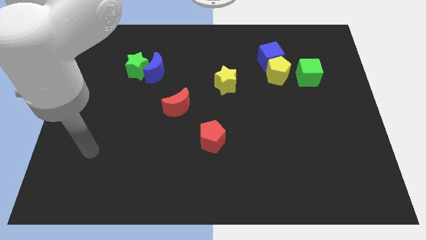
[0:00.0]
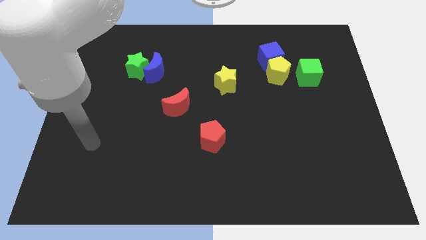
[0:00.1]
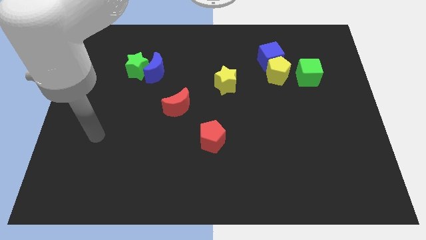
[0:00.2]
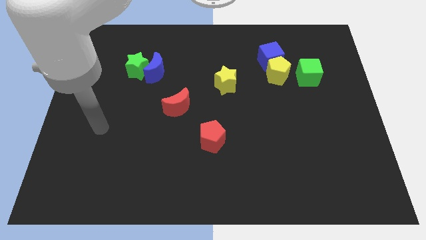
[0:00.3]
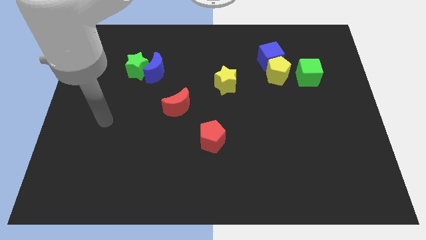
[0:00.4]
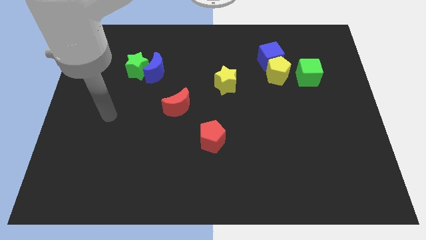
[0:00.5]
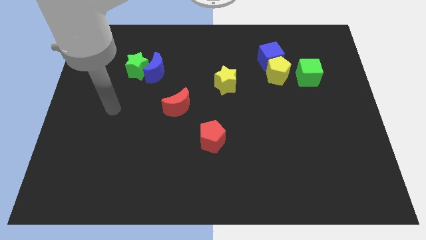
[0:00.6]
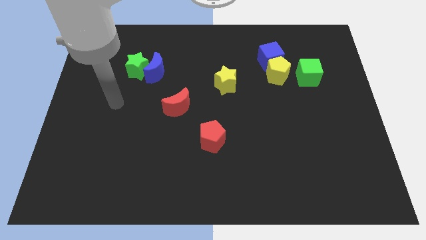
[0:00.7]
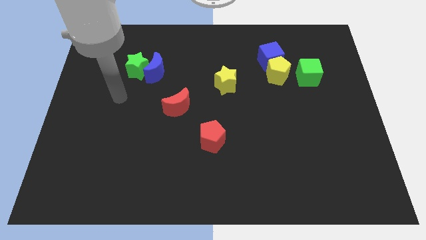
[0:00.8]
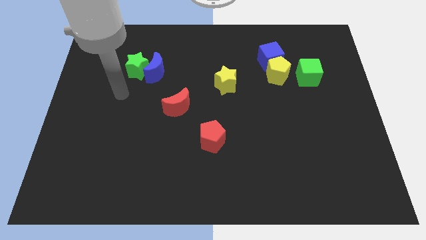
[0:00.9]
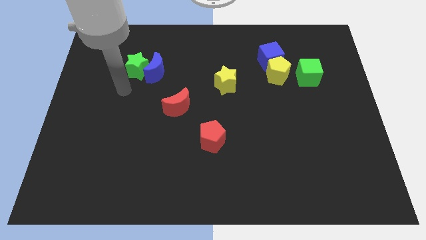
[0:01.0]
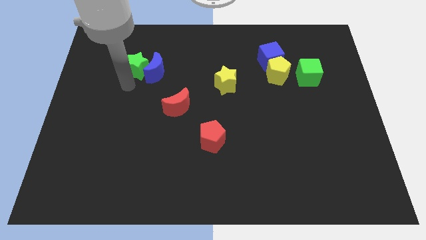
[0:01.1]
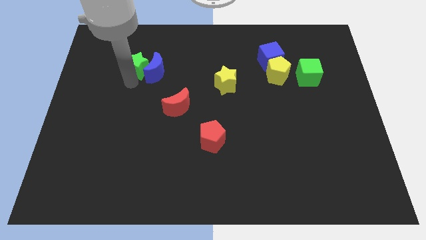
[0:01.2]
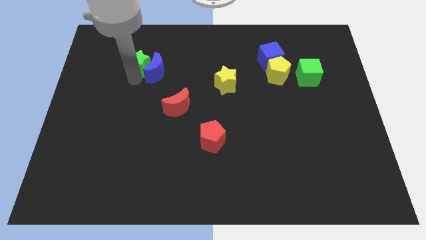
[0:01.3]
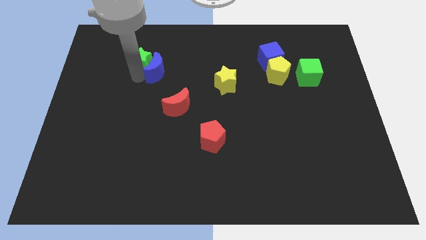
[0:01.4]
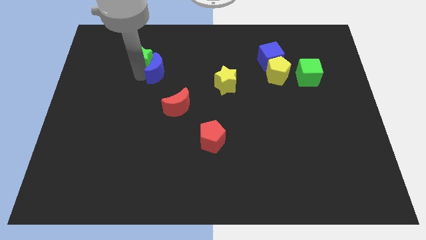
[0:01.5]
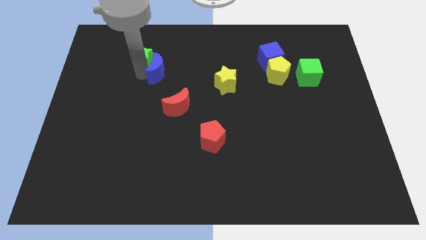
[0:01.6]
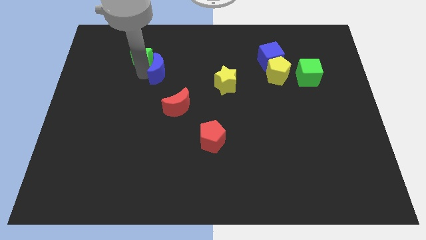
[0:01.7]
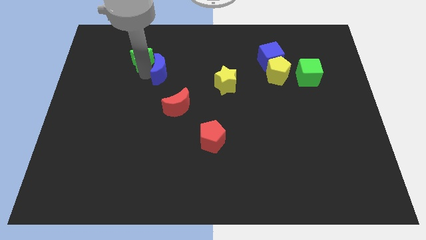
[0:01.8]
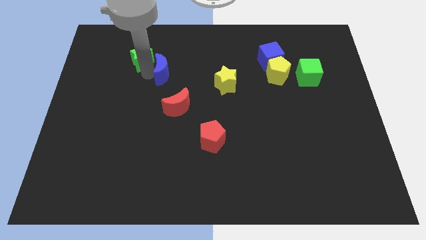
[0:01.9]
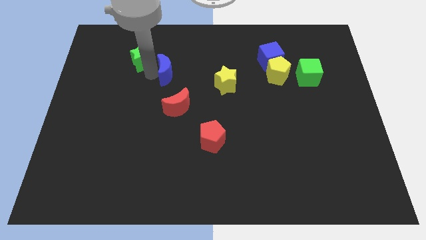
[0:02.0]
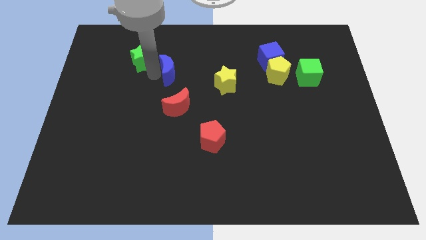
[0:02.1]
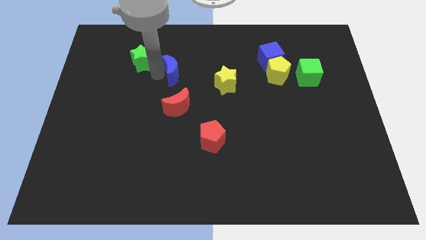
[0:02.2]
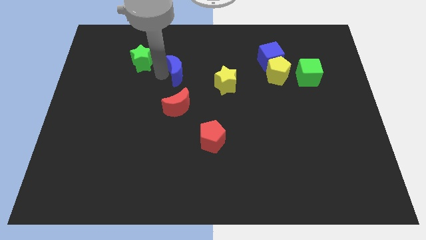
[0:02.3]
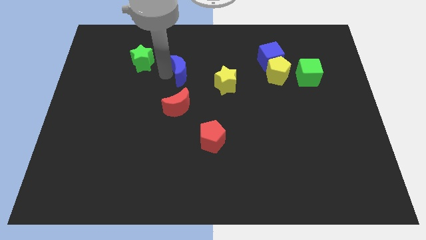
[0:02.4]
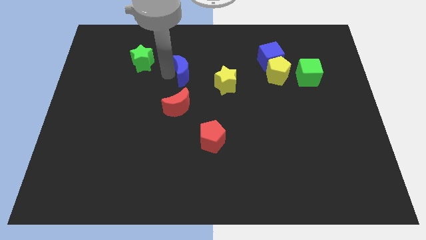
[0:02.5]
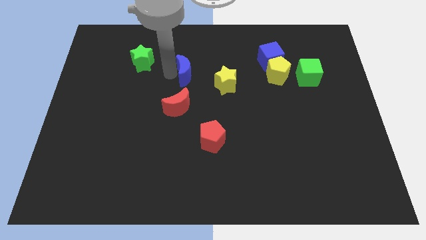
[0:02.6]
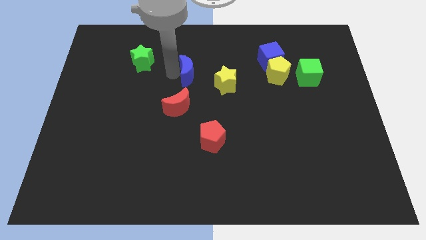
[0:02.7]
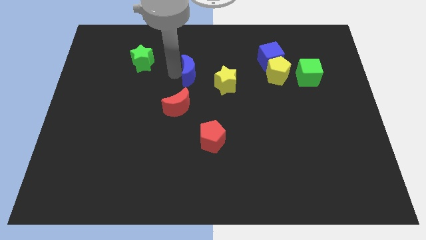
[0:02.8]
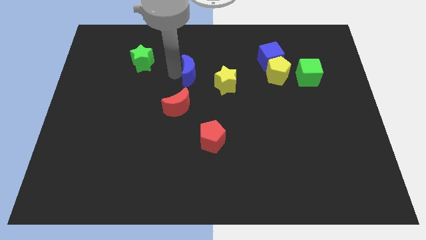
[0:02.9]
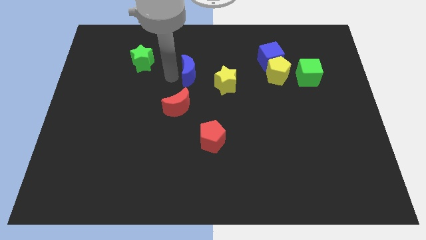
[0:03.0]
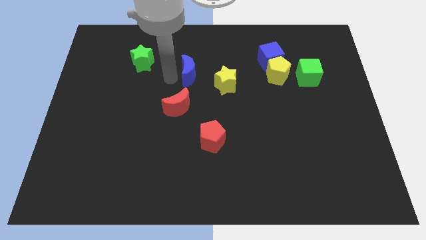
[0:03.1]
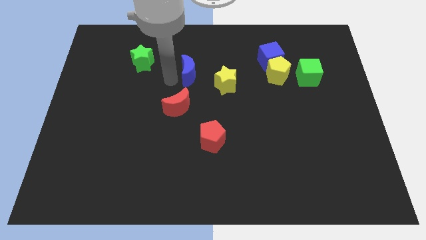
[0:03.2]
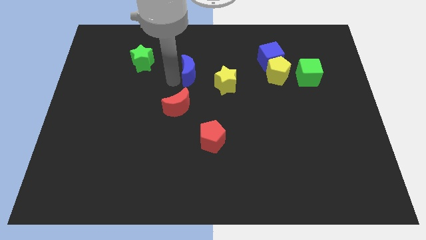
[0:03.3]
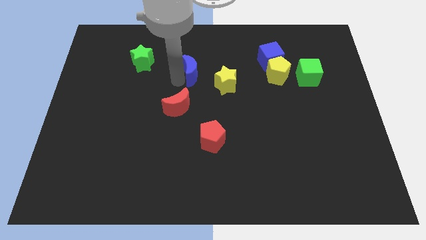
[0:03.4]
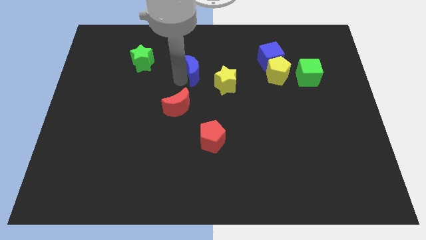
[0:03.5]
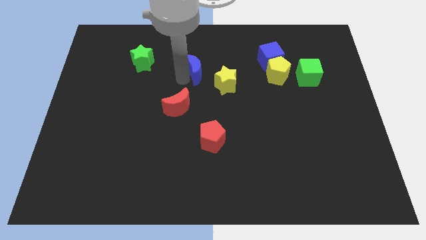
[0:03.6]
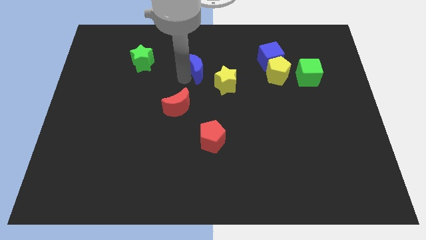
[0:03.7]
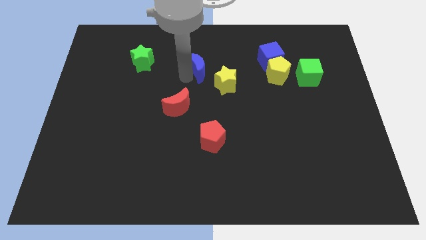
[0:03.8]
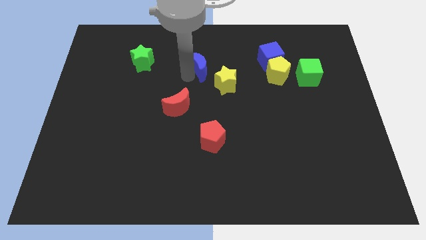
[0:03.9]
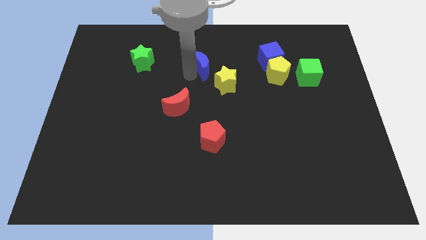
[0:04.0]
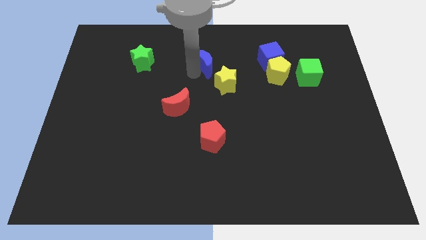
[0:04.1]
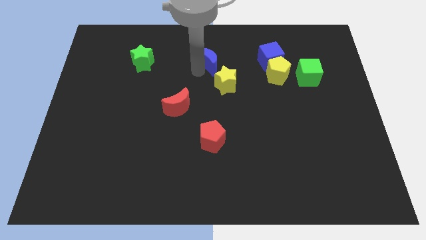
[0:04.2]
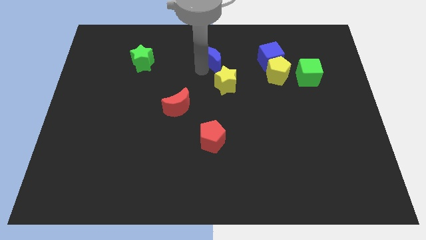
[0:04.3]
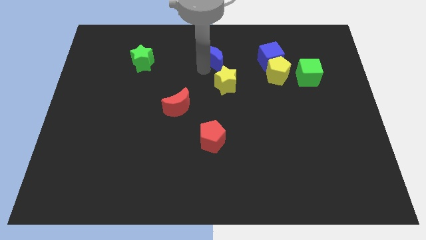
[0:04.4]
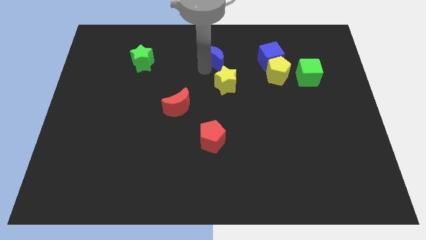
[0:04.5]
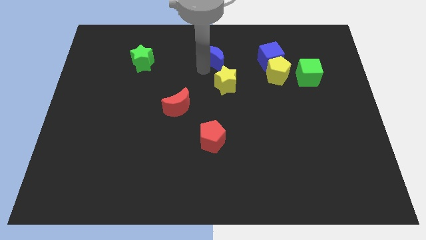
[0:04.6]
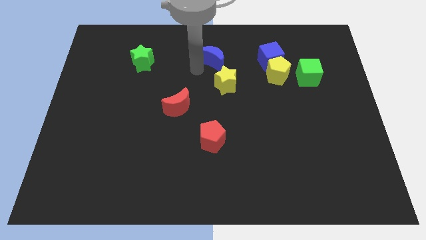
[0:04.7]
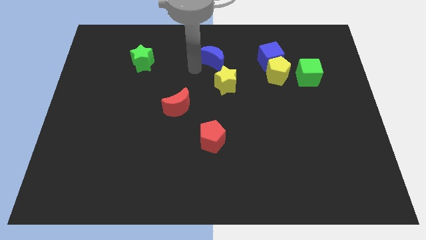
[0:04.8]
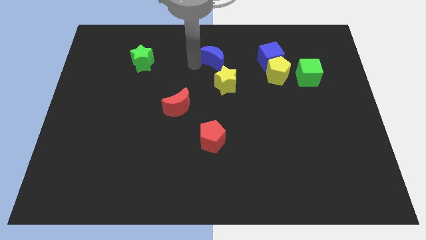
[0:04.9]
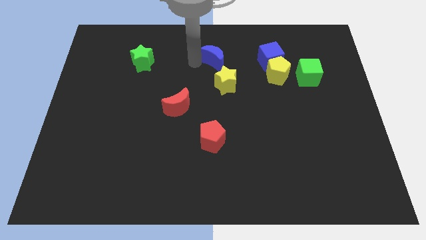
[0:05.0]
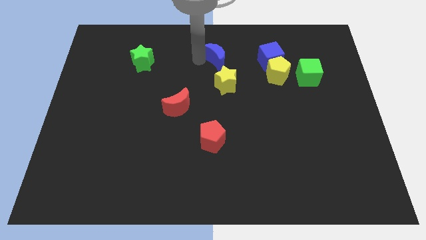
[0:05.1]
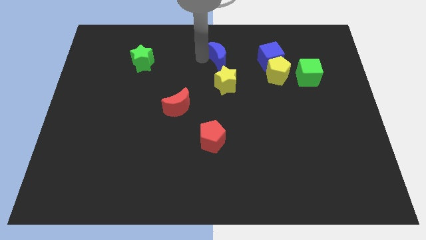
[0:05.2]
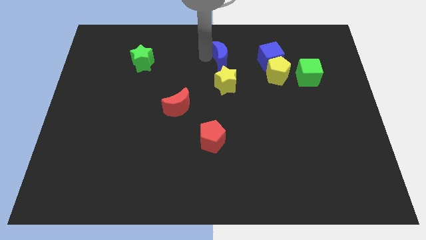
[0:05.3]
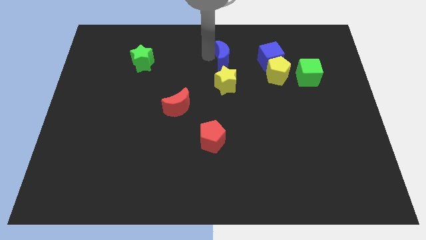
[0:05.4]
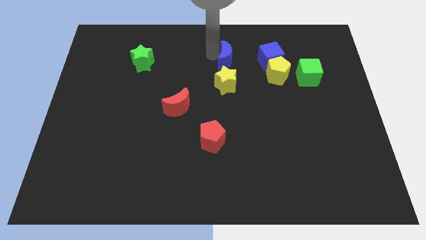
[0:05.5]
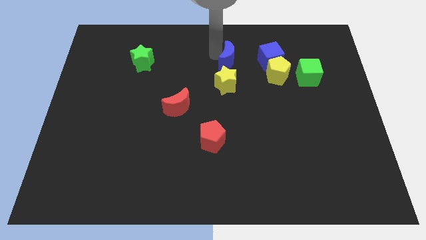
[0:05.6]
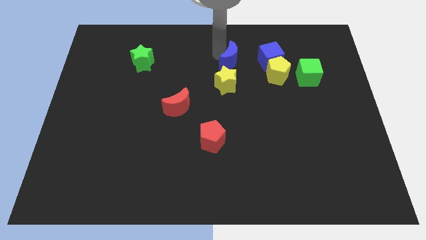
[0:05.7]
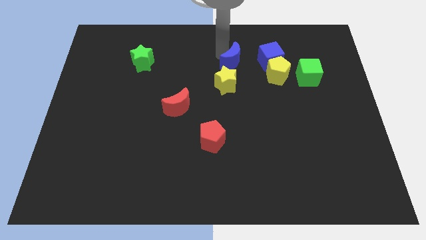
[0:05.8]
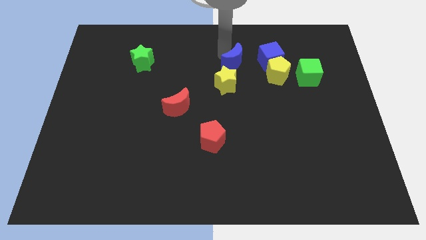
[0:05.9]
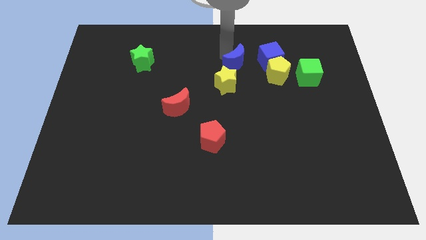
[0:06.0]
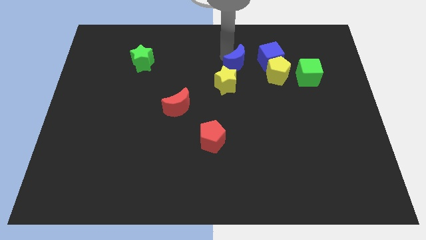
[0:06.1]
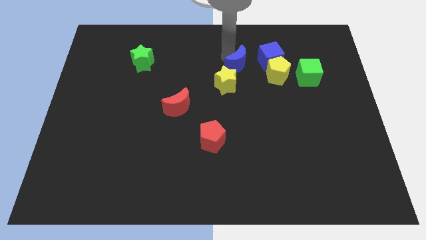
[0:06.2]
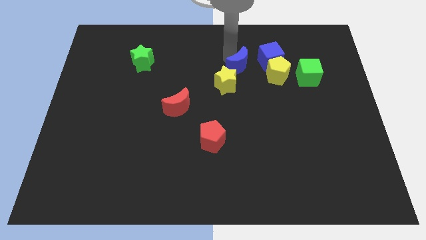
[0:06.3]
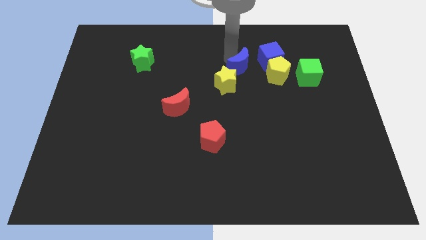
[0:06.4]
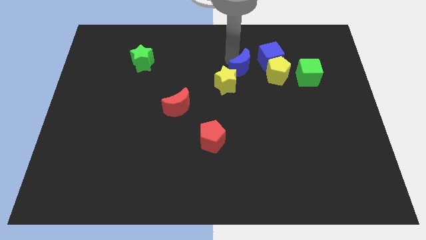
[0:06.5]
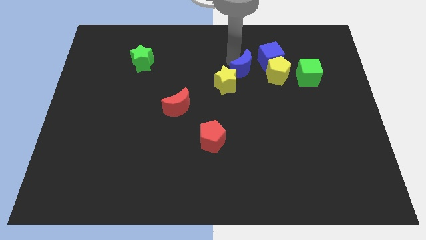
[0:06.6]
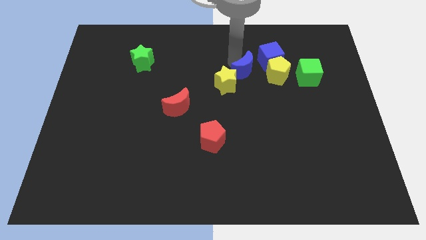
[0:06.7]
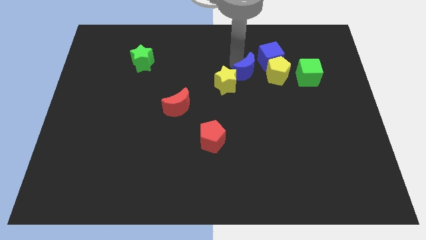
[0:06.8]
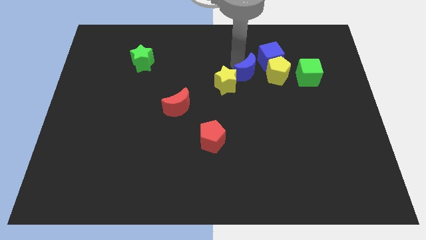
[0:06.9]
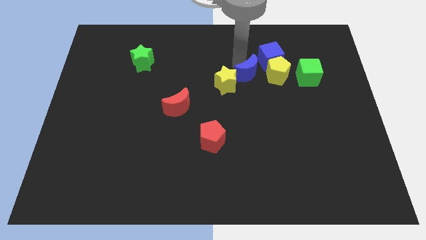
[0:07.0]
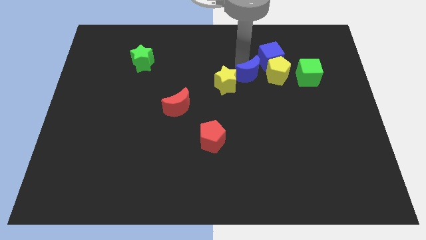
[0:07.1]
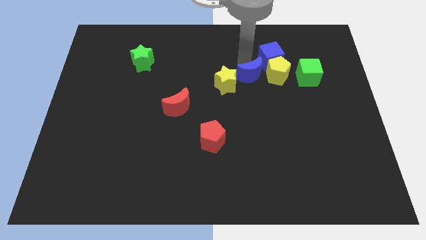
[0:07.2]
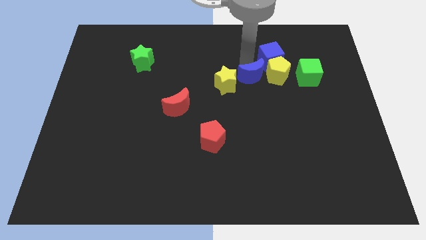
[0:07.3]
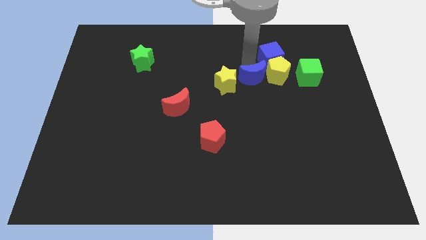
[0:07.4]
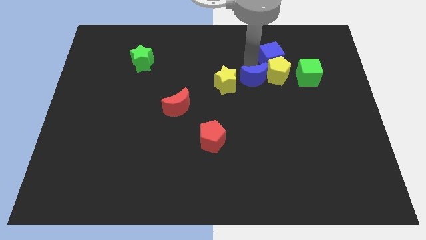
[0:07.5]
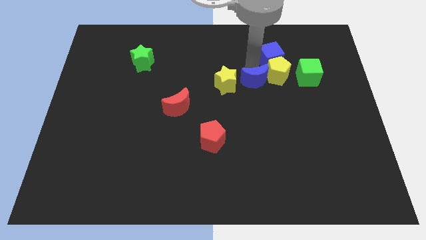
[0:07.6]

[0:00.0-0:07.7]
slide the blue moon towards the yellow pentagon

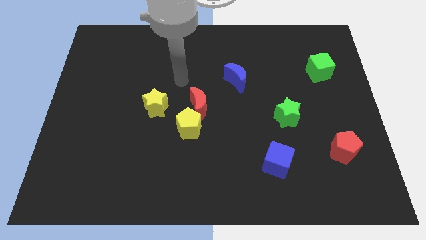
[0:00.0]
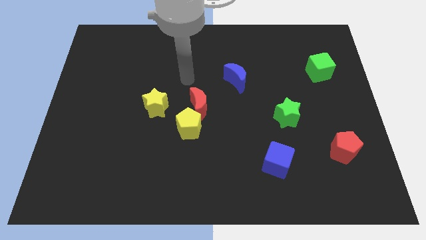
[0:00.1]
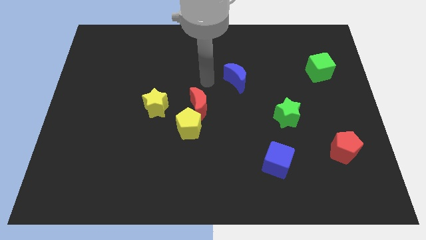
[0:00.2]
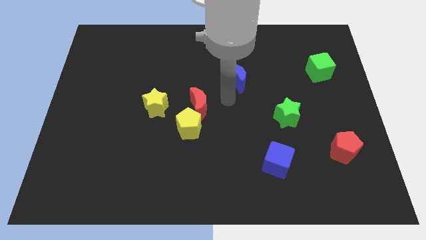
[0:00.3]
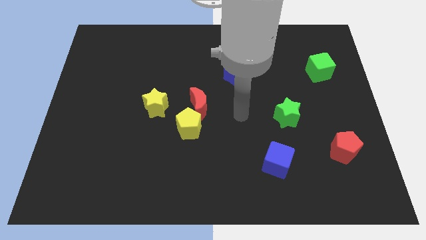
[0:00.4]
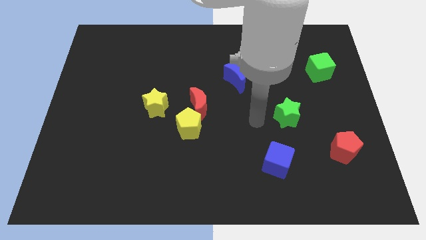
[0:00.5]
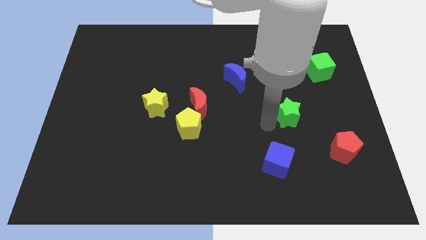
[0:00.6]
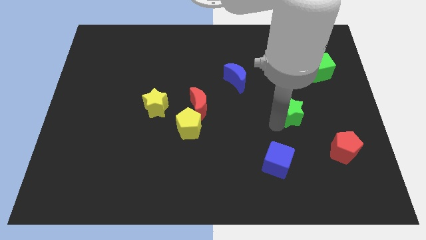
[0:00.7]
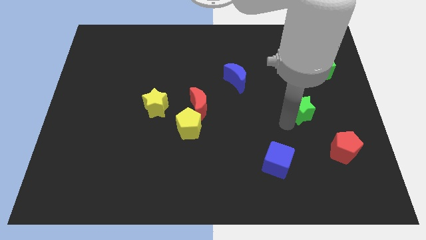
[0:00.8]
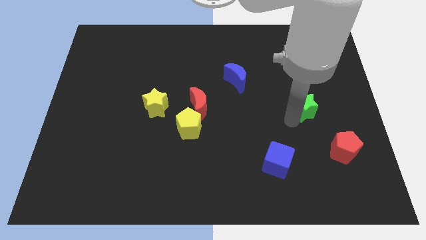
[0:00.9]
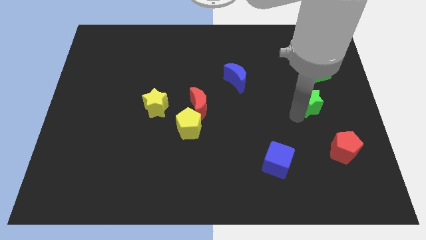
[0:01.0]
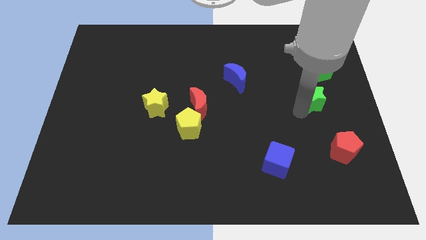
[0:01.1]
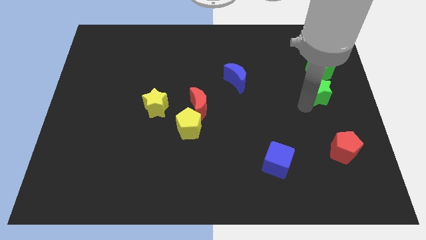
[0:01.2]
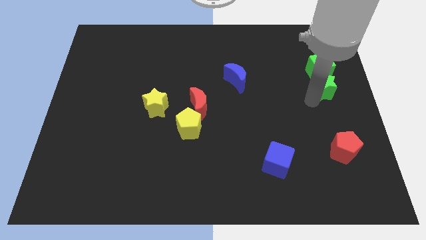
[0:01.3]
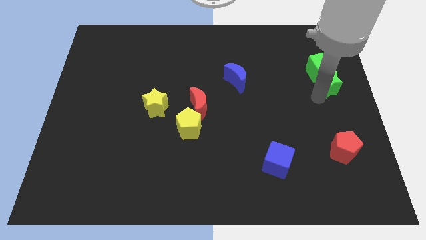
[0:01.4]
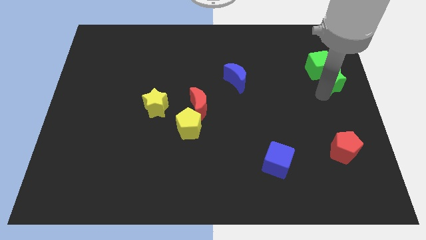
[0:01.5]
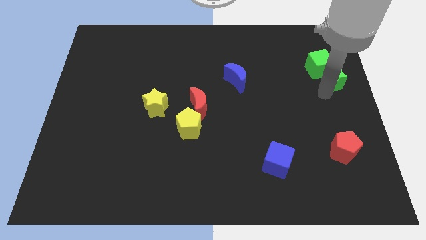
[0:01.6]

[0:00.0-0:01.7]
put the green star towards the green cube
